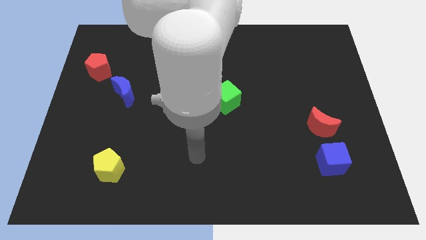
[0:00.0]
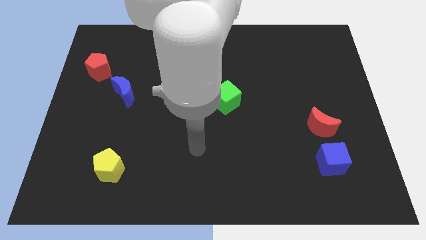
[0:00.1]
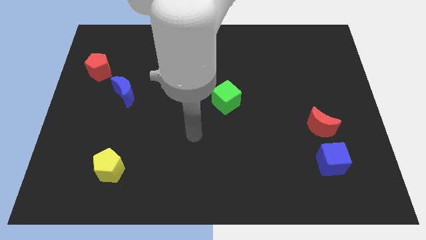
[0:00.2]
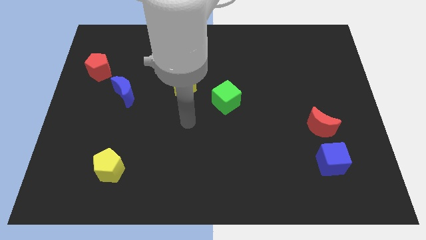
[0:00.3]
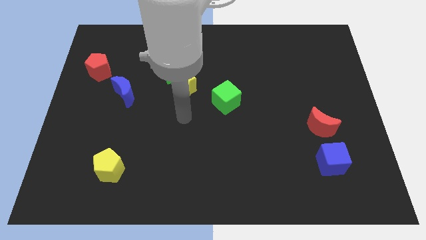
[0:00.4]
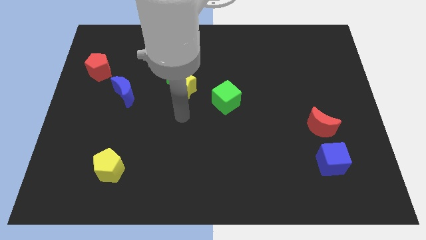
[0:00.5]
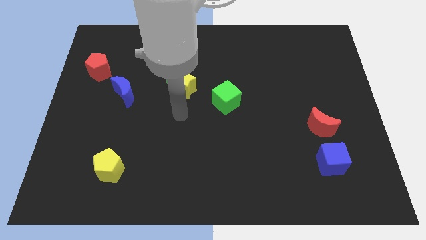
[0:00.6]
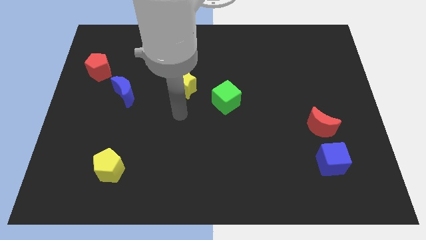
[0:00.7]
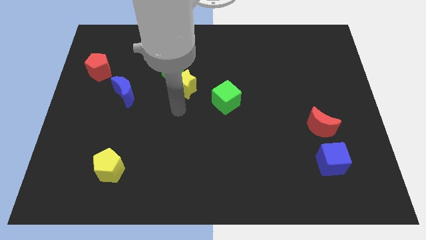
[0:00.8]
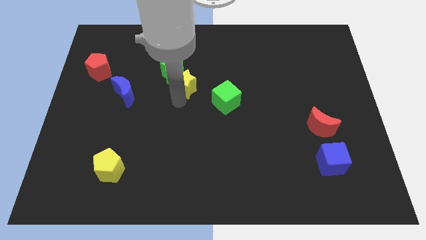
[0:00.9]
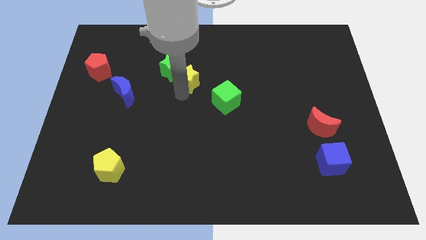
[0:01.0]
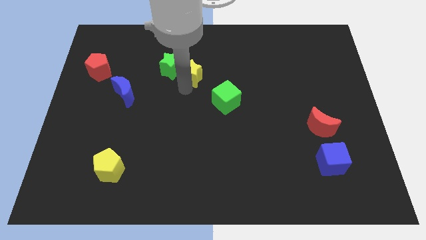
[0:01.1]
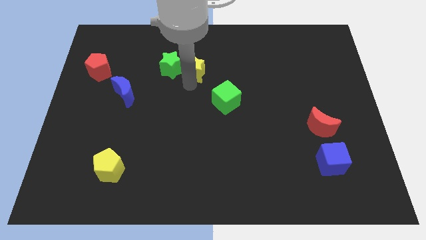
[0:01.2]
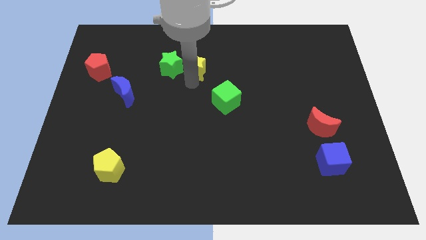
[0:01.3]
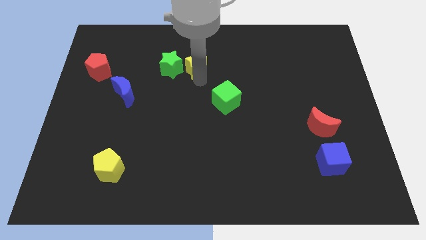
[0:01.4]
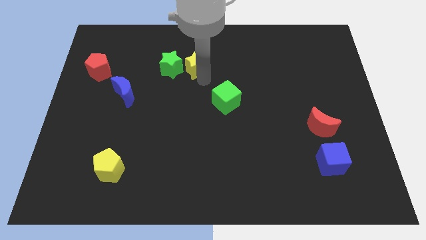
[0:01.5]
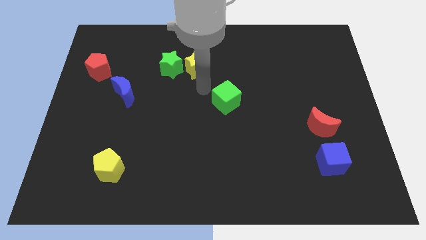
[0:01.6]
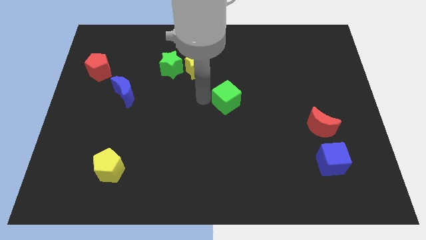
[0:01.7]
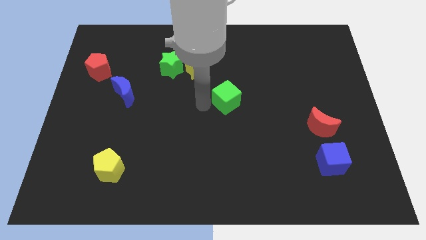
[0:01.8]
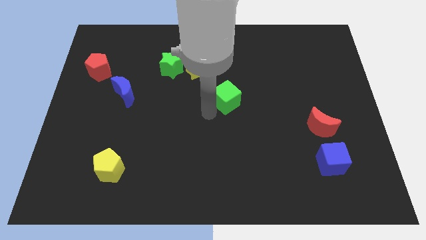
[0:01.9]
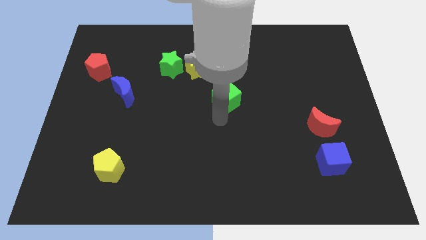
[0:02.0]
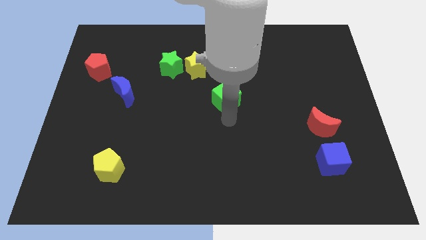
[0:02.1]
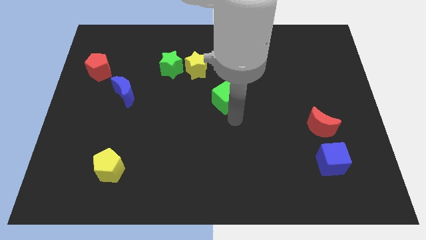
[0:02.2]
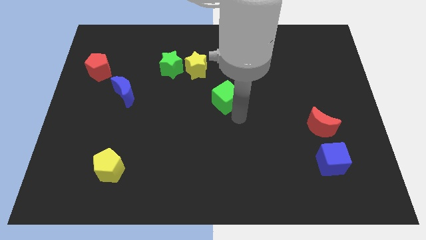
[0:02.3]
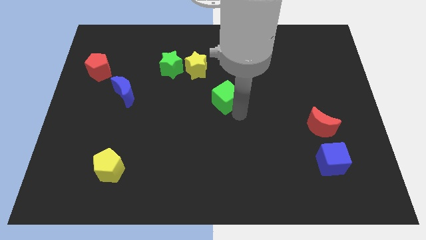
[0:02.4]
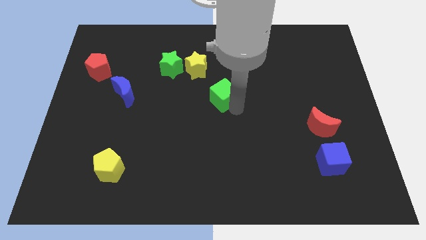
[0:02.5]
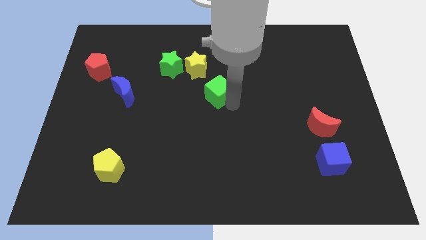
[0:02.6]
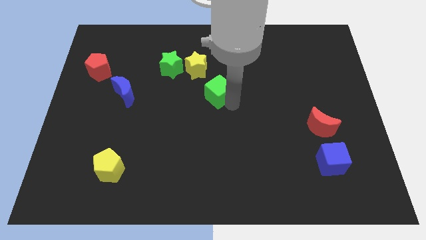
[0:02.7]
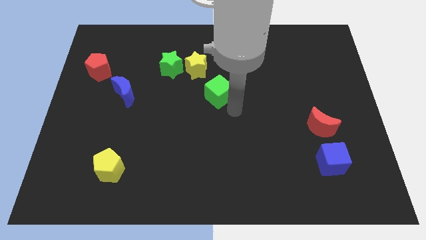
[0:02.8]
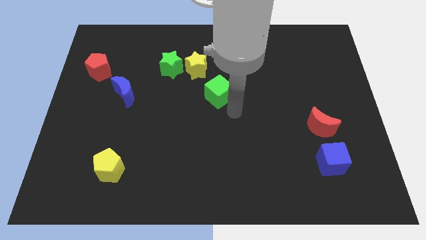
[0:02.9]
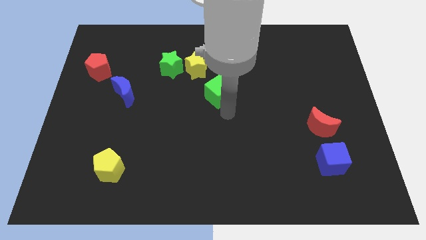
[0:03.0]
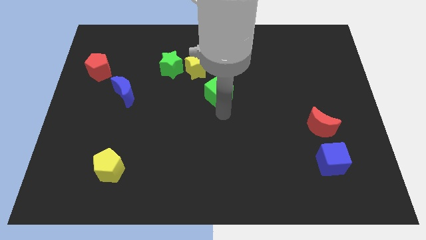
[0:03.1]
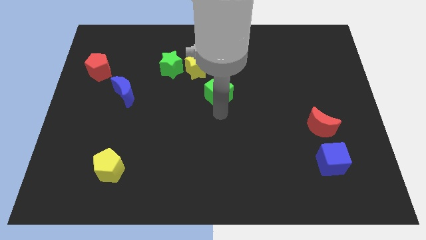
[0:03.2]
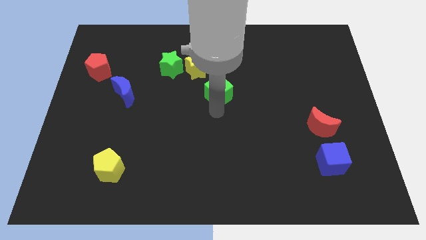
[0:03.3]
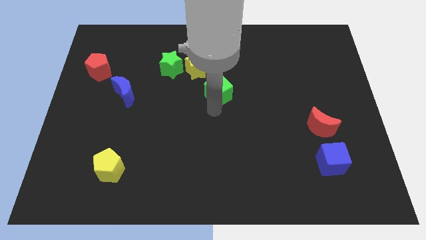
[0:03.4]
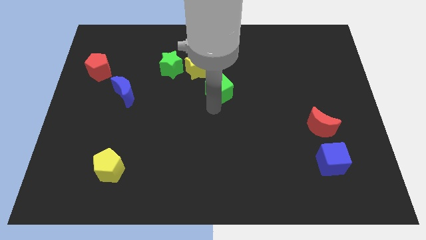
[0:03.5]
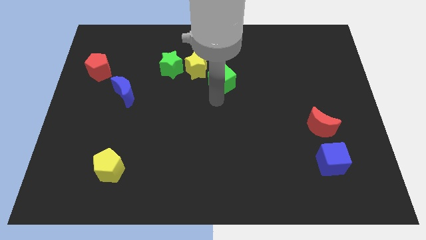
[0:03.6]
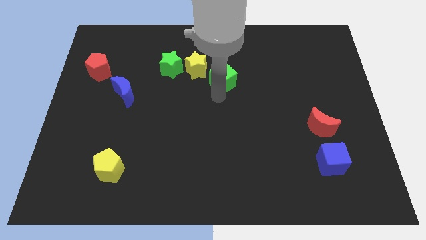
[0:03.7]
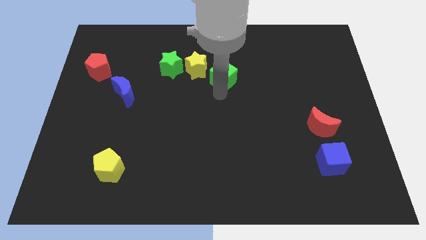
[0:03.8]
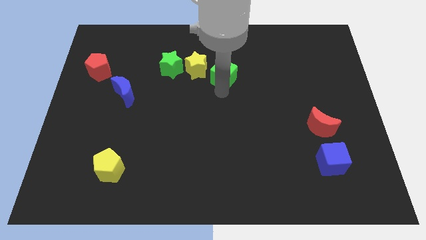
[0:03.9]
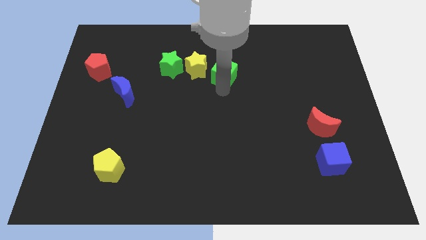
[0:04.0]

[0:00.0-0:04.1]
push the yellow star into the green star

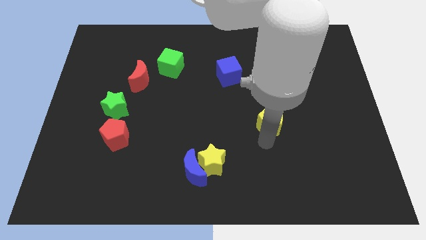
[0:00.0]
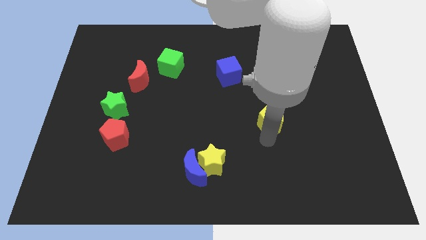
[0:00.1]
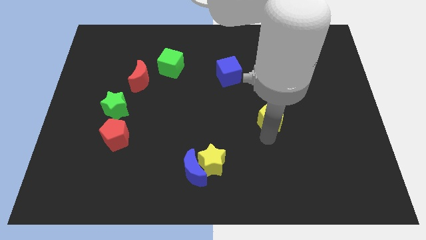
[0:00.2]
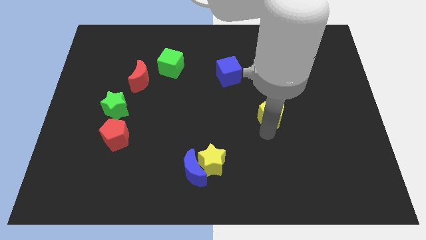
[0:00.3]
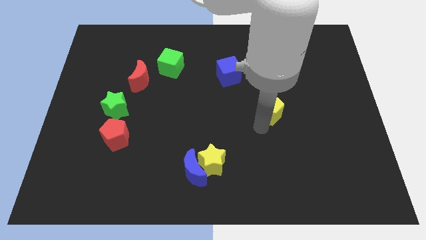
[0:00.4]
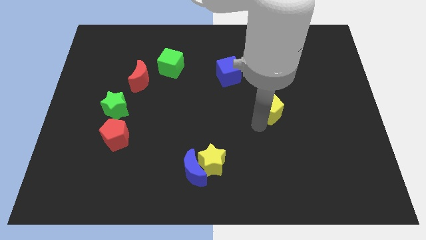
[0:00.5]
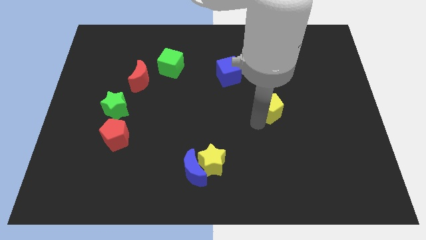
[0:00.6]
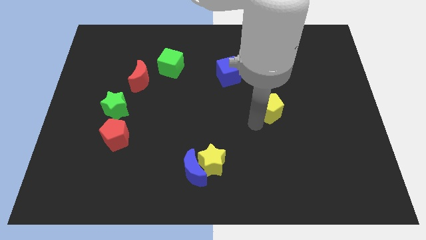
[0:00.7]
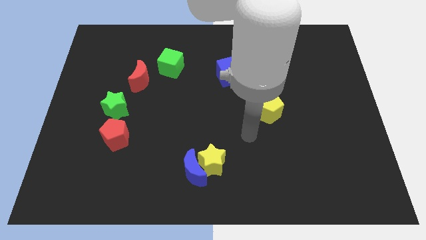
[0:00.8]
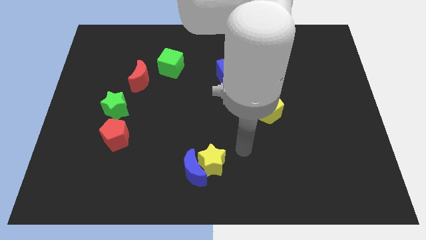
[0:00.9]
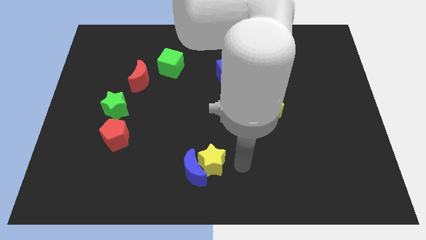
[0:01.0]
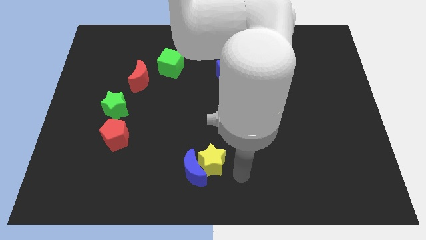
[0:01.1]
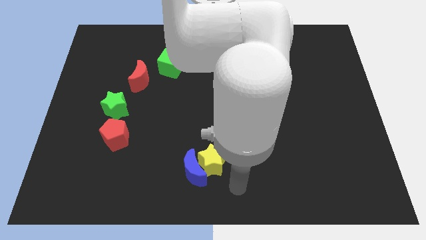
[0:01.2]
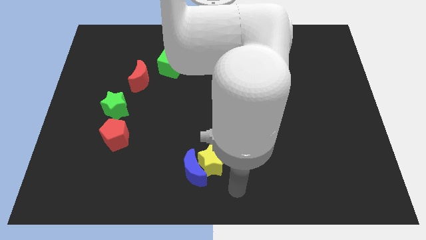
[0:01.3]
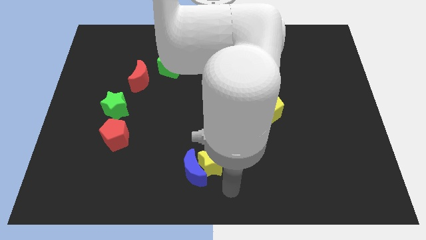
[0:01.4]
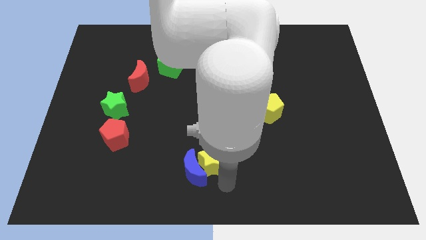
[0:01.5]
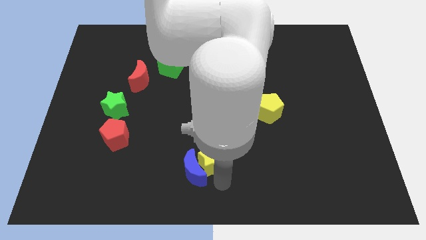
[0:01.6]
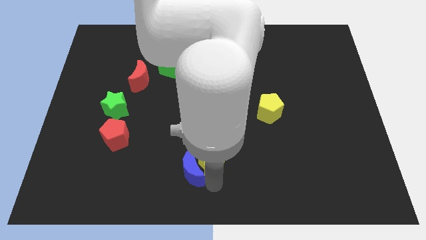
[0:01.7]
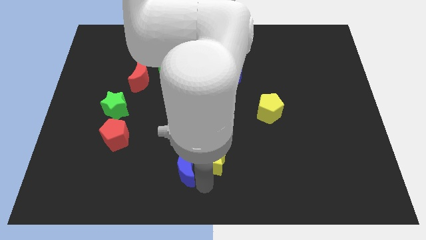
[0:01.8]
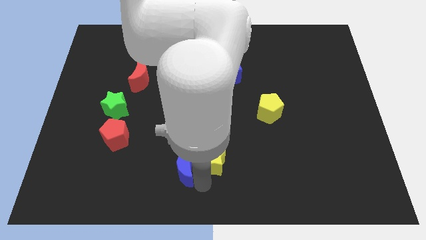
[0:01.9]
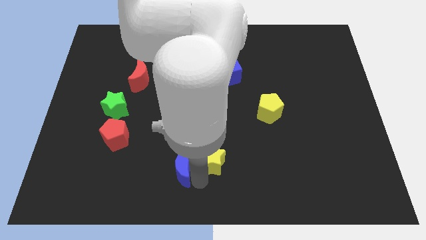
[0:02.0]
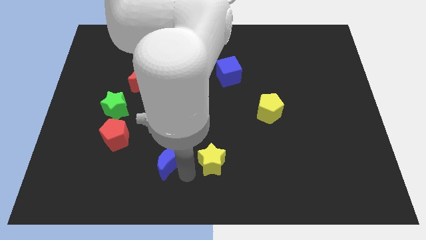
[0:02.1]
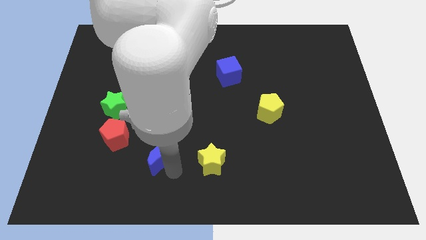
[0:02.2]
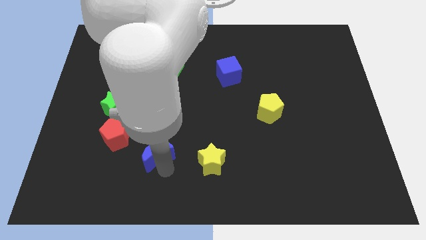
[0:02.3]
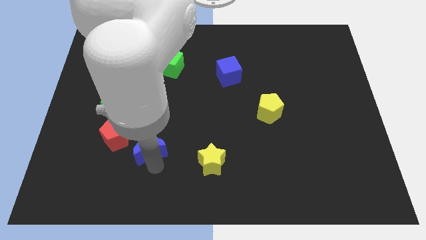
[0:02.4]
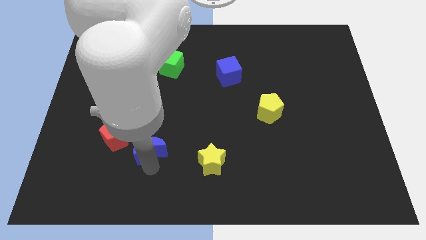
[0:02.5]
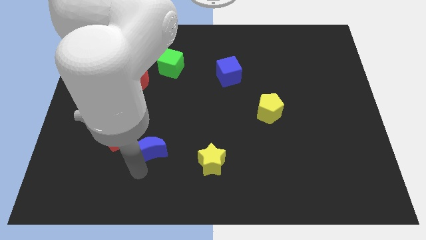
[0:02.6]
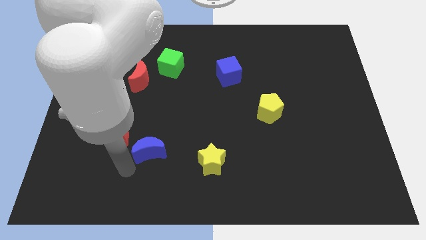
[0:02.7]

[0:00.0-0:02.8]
push blue crescent towards red pentagon

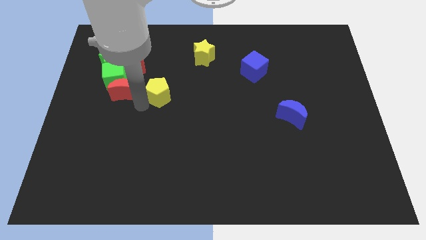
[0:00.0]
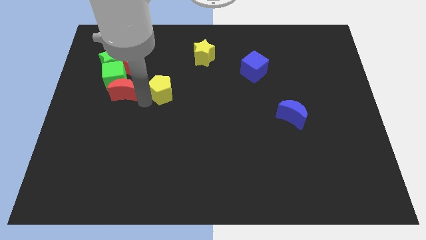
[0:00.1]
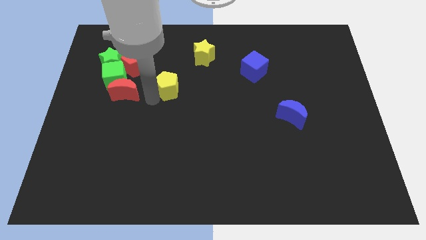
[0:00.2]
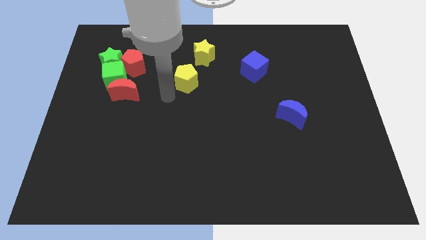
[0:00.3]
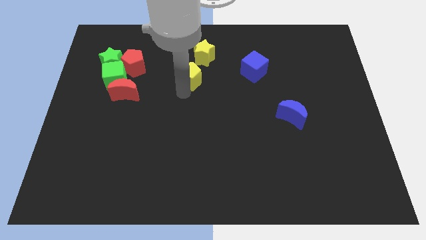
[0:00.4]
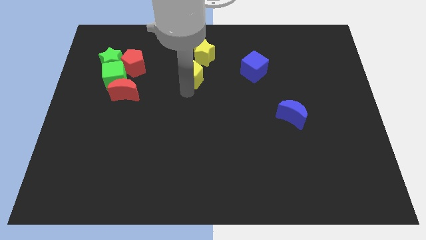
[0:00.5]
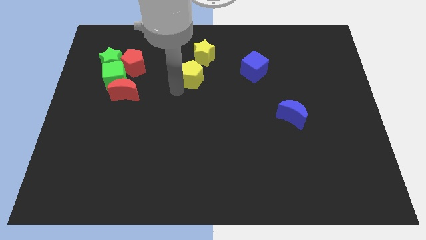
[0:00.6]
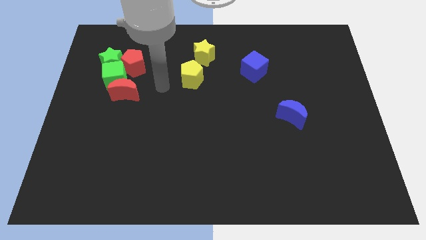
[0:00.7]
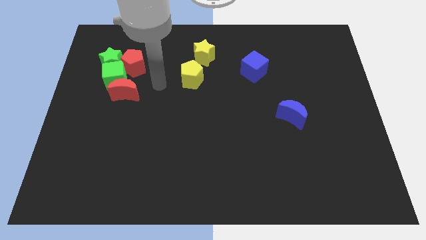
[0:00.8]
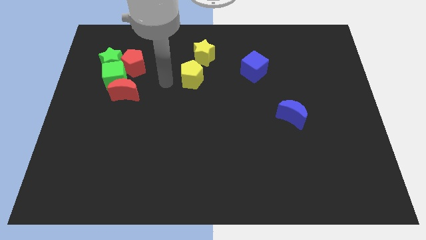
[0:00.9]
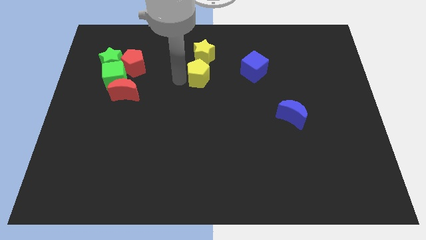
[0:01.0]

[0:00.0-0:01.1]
push yellow pentagon towards yellow star

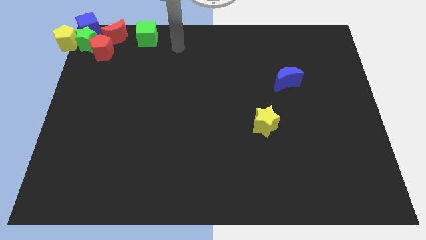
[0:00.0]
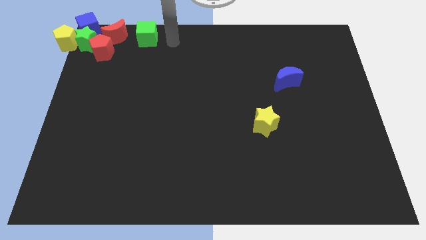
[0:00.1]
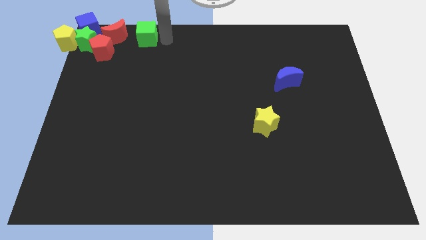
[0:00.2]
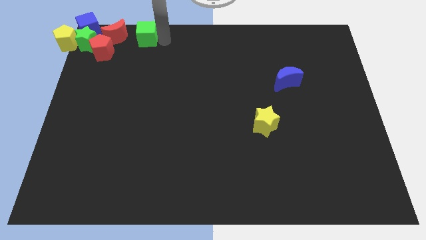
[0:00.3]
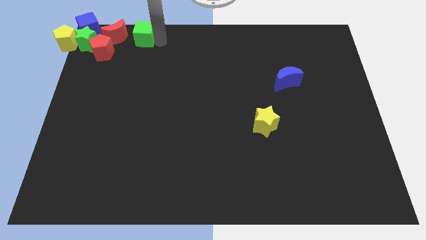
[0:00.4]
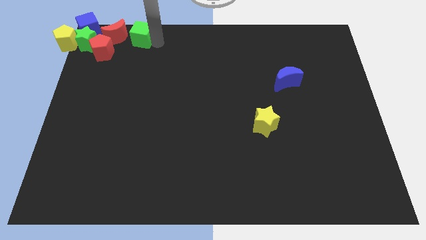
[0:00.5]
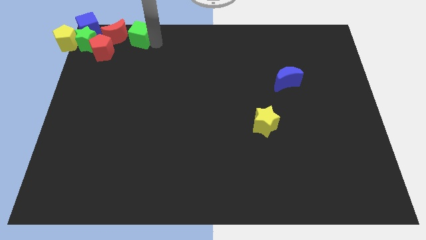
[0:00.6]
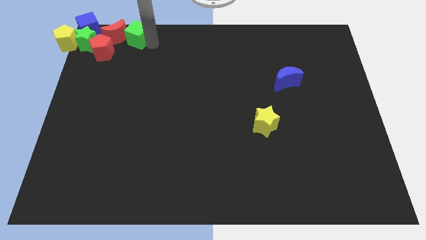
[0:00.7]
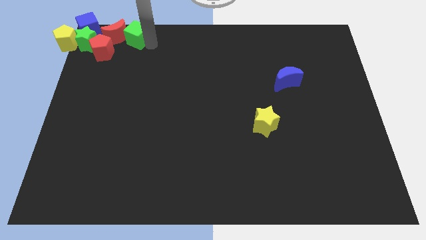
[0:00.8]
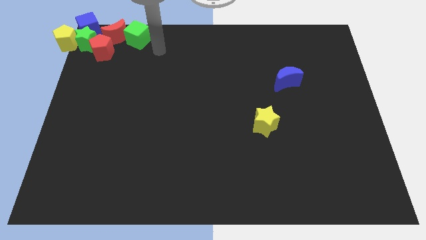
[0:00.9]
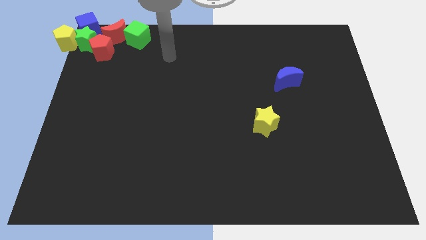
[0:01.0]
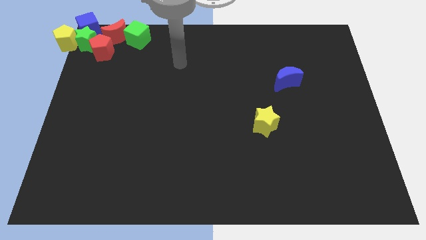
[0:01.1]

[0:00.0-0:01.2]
move the green cube towards the right to the red crescent
